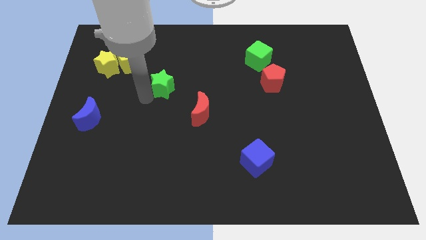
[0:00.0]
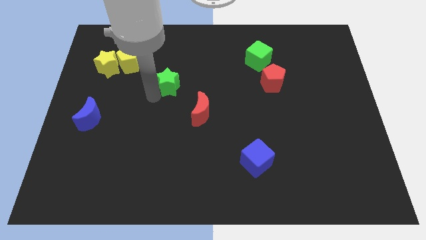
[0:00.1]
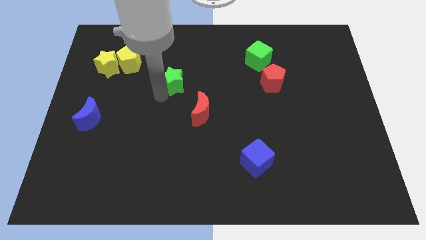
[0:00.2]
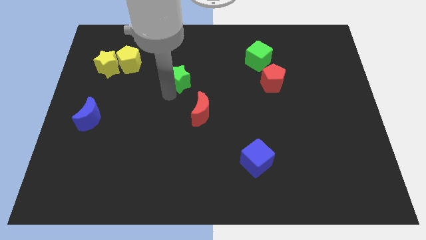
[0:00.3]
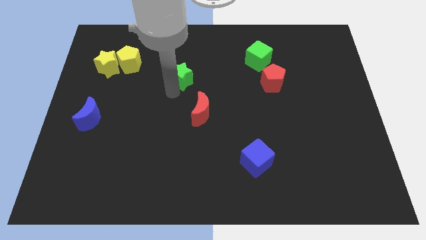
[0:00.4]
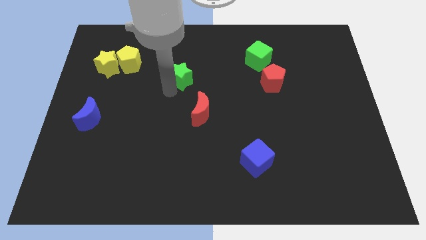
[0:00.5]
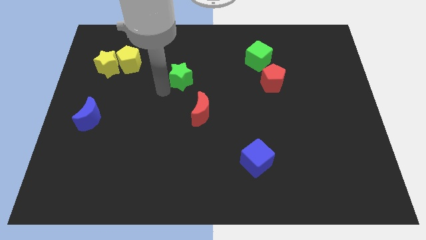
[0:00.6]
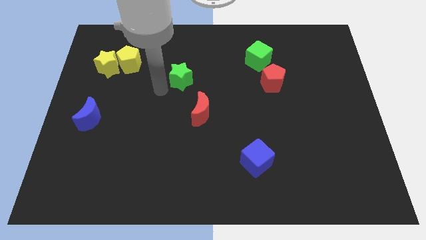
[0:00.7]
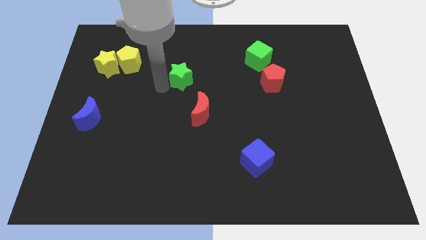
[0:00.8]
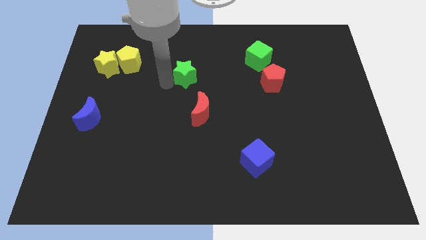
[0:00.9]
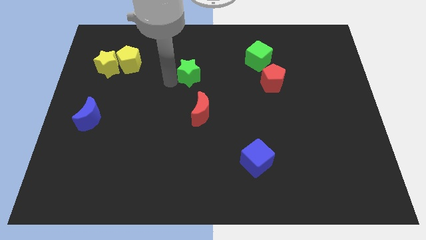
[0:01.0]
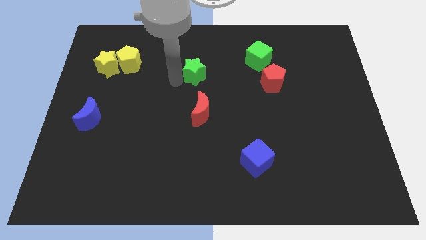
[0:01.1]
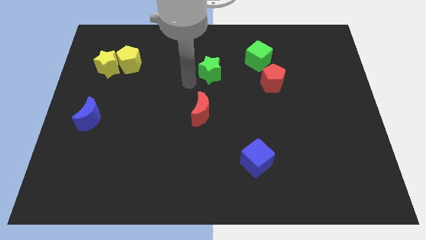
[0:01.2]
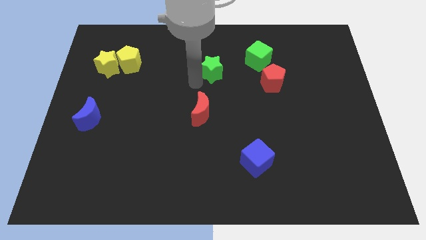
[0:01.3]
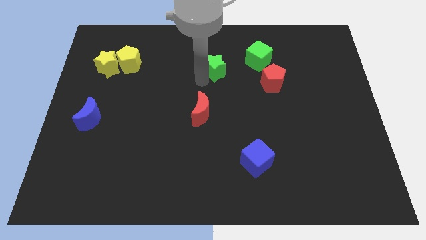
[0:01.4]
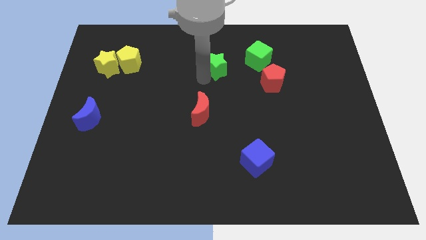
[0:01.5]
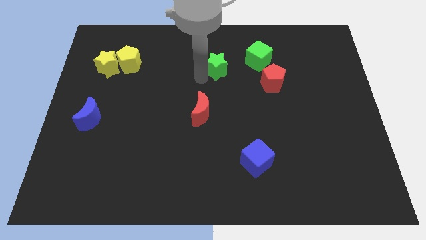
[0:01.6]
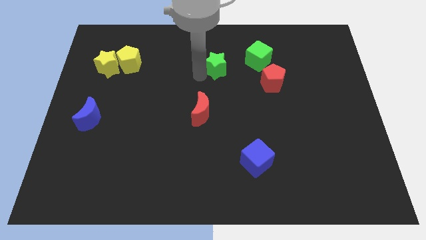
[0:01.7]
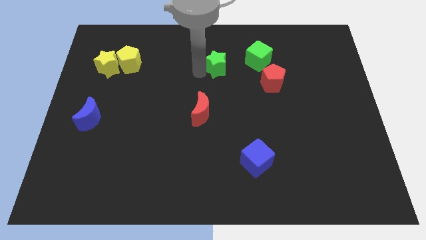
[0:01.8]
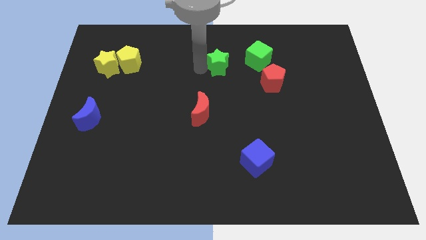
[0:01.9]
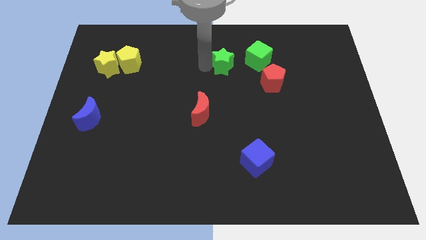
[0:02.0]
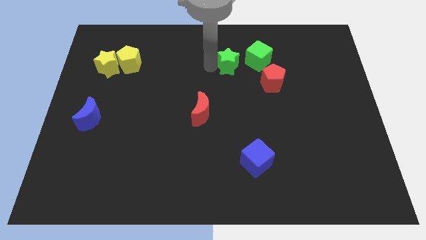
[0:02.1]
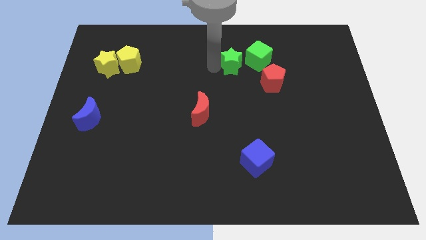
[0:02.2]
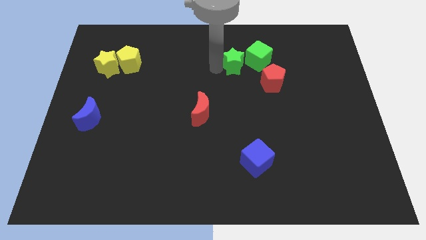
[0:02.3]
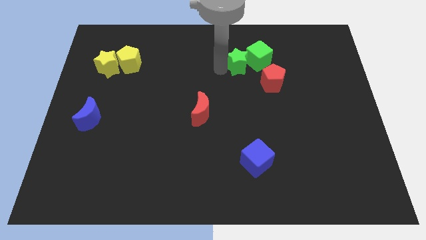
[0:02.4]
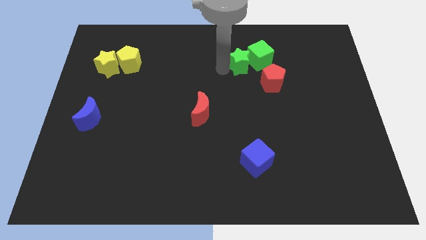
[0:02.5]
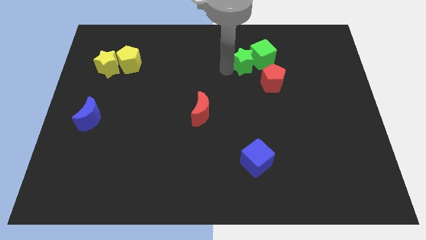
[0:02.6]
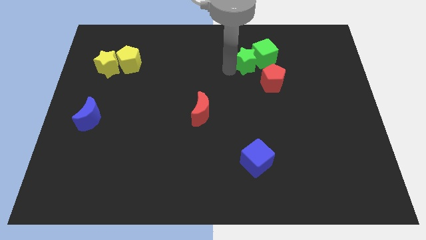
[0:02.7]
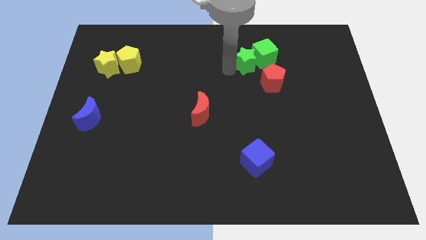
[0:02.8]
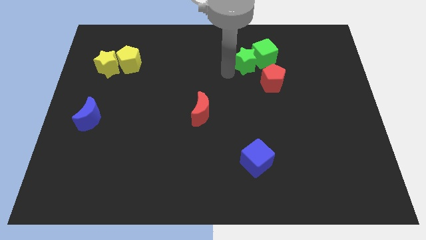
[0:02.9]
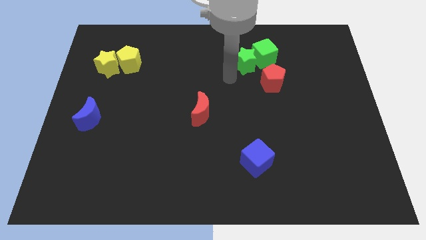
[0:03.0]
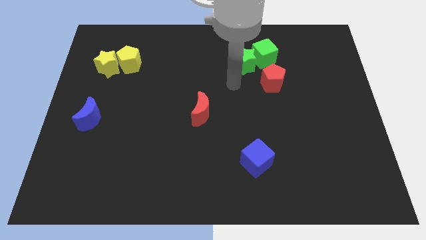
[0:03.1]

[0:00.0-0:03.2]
push the green star into the green cube

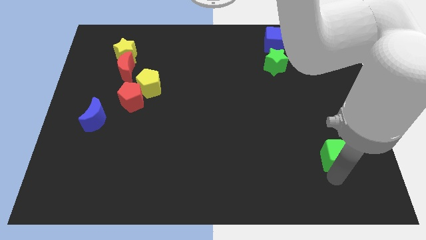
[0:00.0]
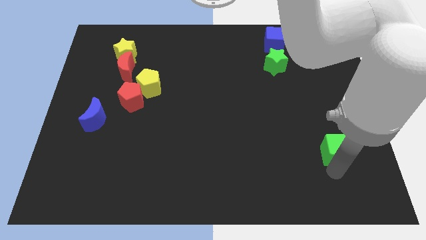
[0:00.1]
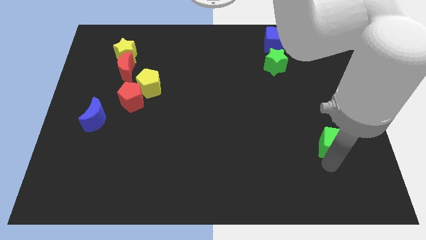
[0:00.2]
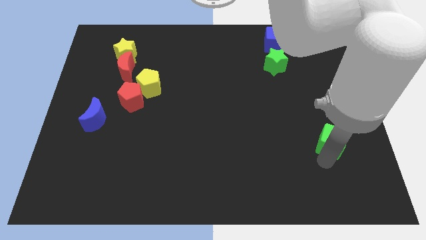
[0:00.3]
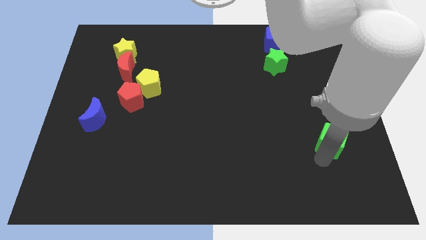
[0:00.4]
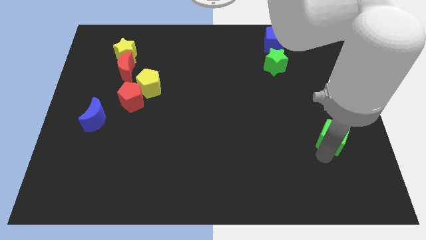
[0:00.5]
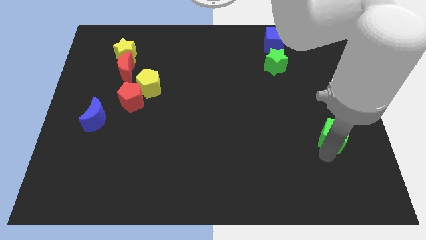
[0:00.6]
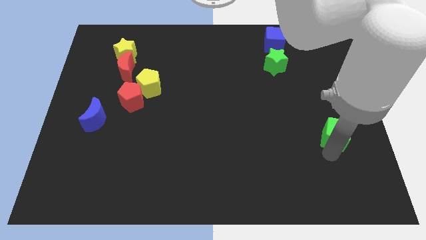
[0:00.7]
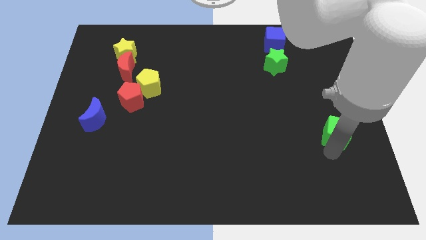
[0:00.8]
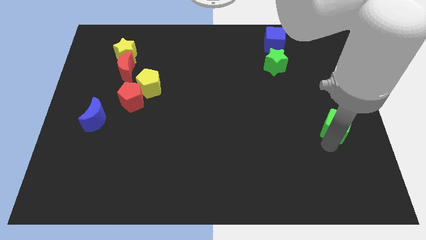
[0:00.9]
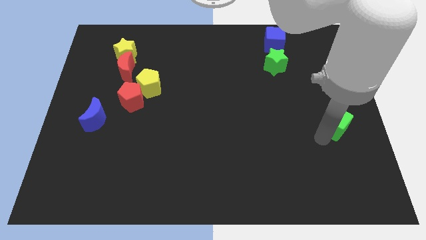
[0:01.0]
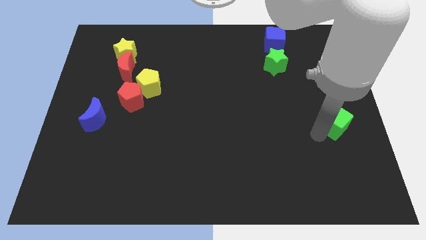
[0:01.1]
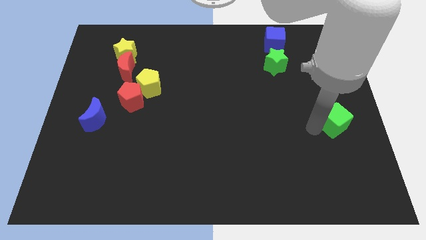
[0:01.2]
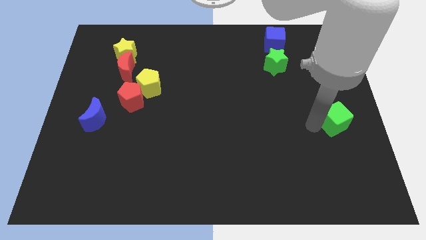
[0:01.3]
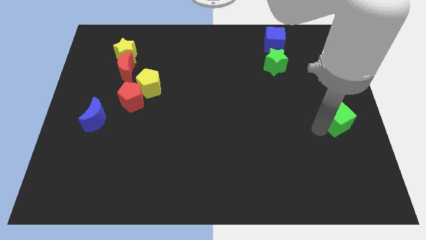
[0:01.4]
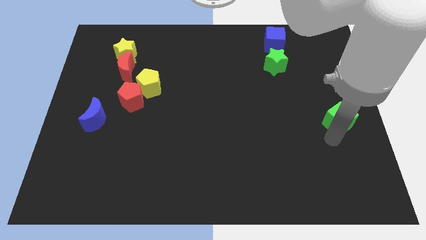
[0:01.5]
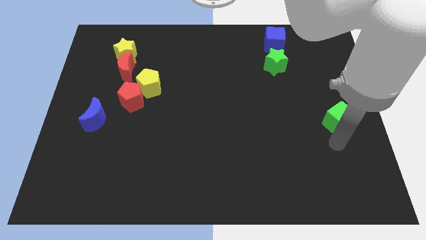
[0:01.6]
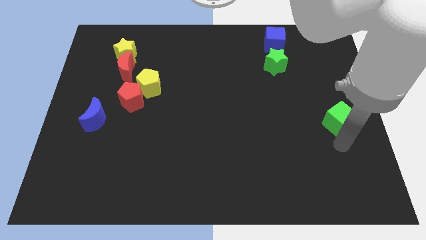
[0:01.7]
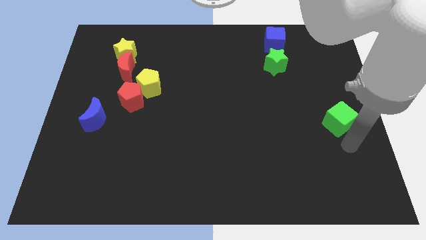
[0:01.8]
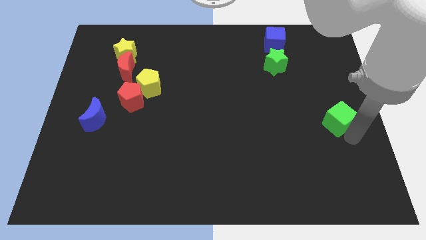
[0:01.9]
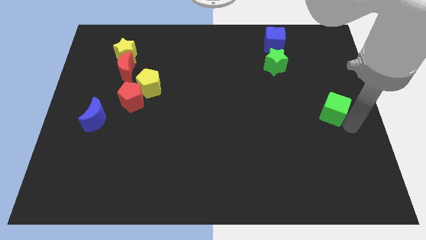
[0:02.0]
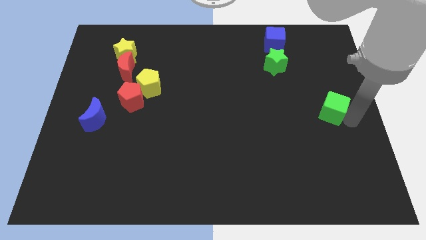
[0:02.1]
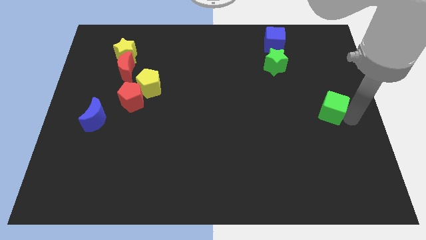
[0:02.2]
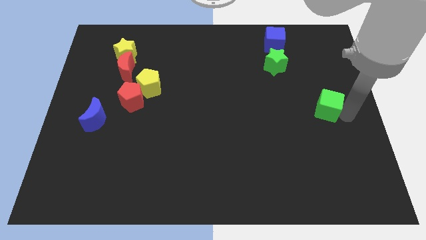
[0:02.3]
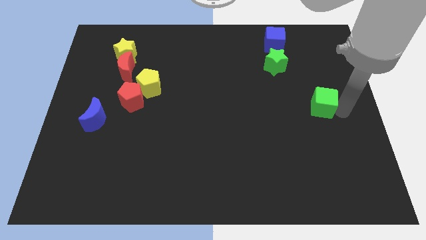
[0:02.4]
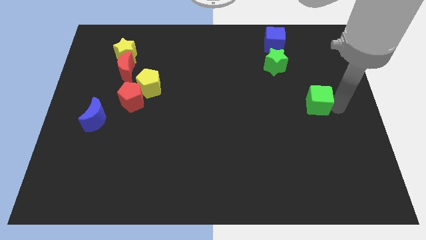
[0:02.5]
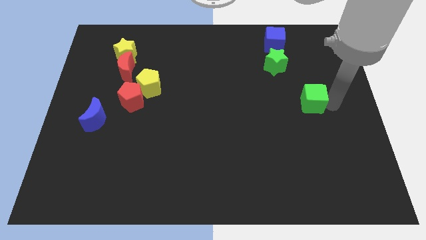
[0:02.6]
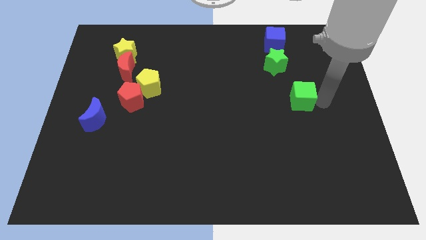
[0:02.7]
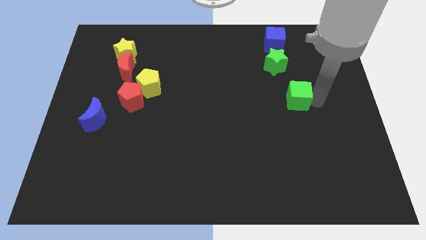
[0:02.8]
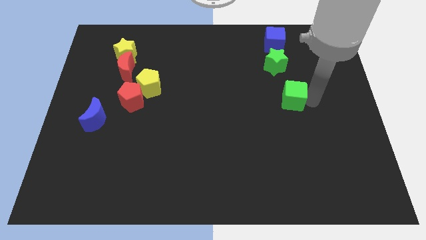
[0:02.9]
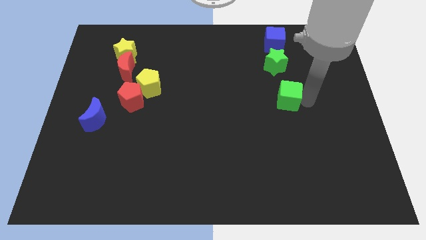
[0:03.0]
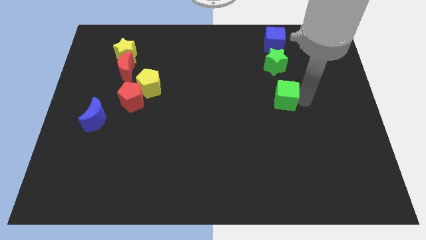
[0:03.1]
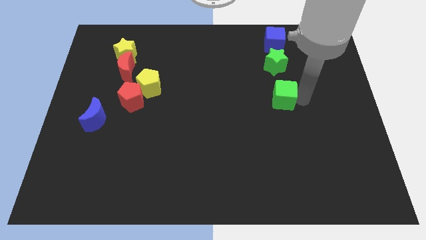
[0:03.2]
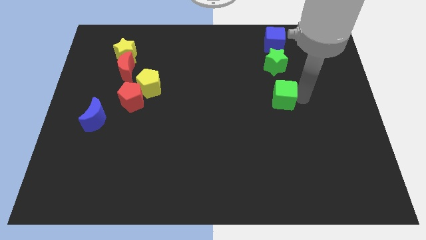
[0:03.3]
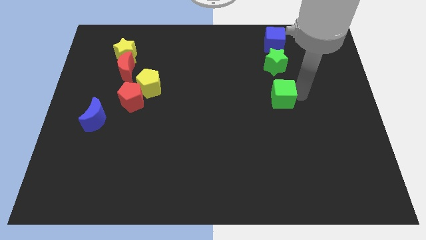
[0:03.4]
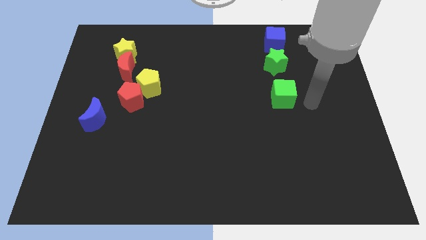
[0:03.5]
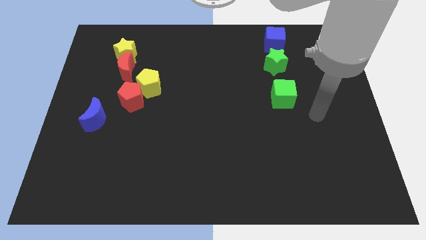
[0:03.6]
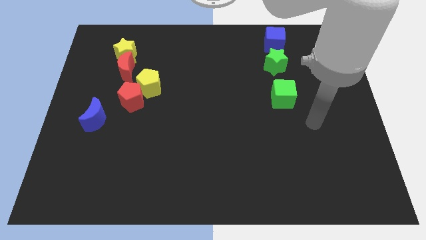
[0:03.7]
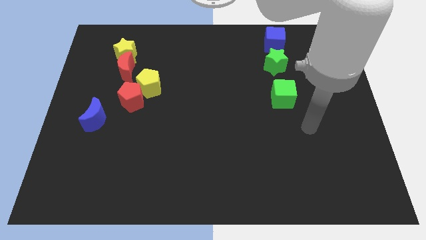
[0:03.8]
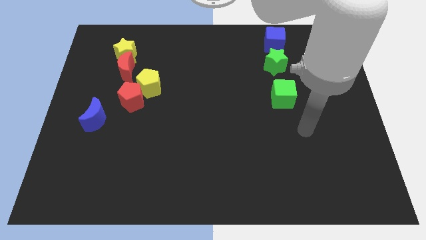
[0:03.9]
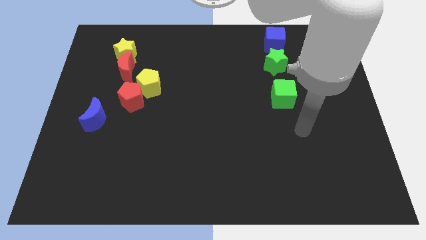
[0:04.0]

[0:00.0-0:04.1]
push green cube below the green star

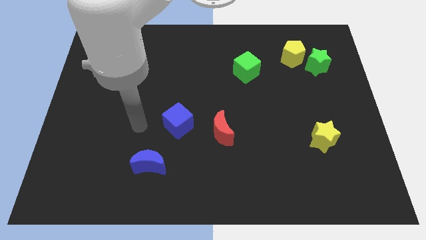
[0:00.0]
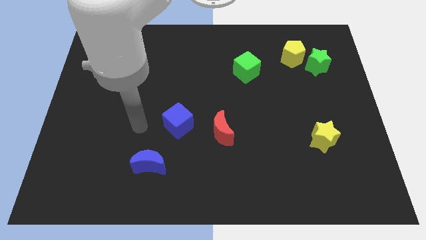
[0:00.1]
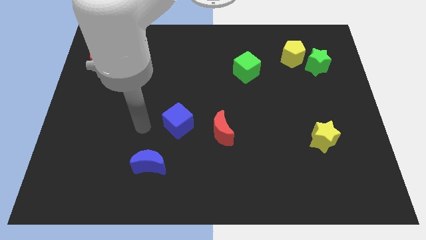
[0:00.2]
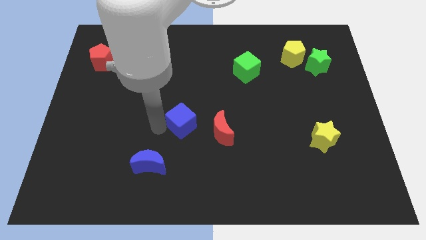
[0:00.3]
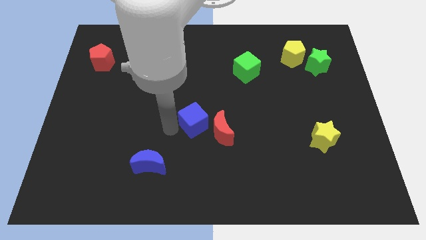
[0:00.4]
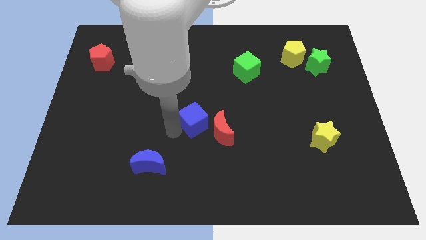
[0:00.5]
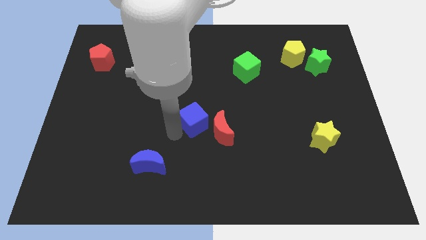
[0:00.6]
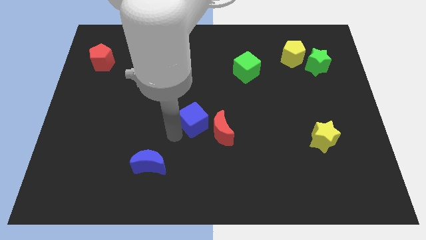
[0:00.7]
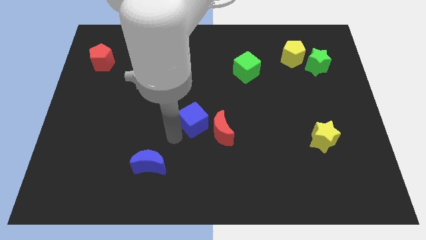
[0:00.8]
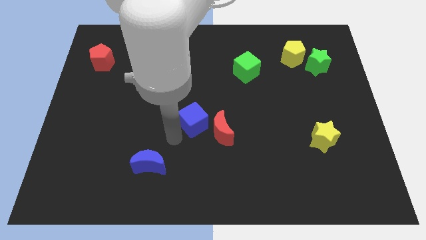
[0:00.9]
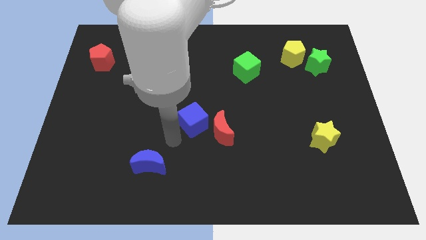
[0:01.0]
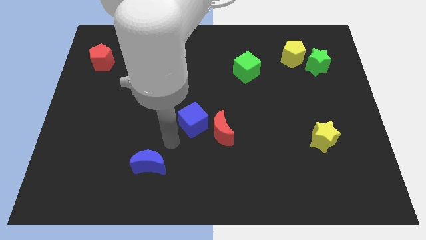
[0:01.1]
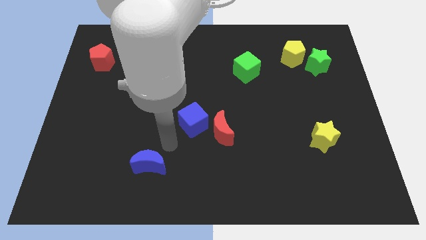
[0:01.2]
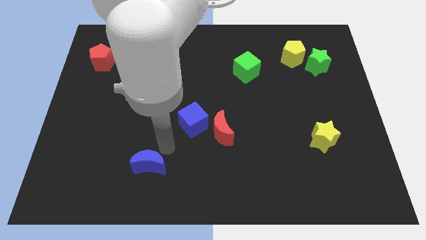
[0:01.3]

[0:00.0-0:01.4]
push blue cube close to the red moon

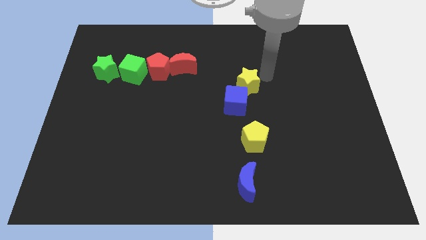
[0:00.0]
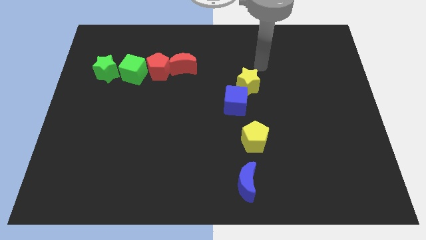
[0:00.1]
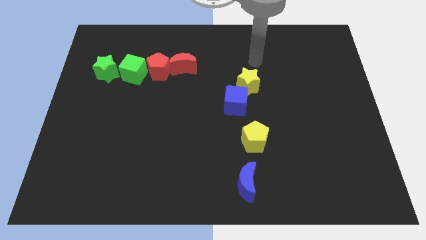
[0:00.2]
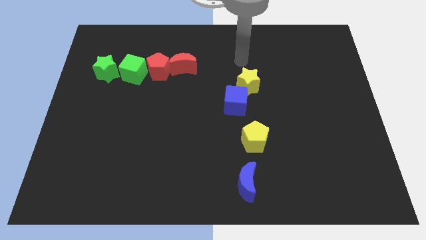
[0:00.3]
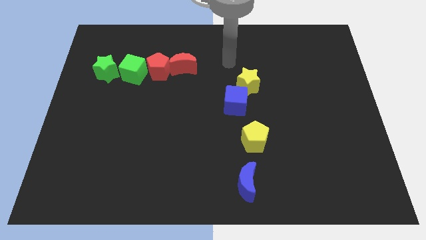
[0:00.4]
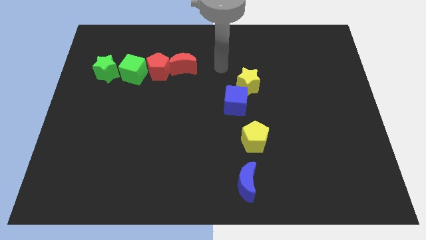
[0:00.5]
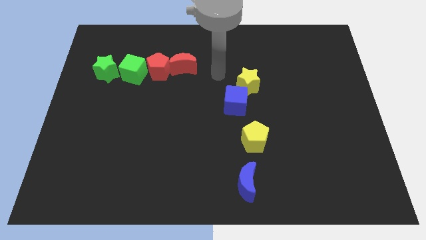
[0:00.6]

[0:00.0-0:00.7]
move your arm to the right of the red crescent
